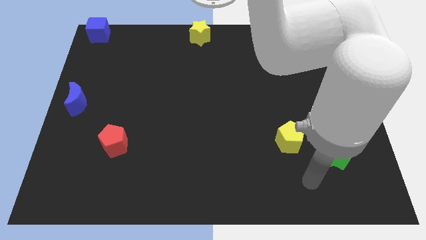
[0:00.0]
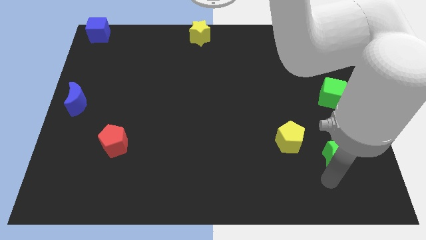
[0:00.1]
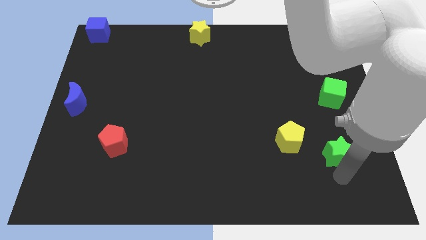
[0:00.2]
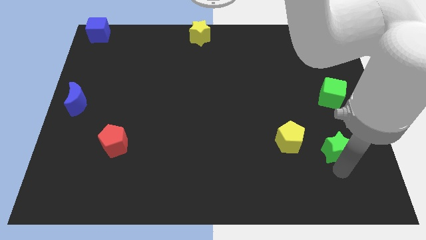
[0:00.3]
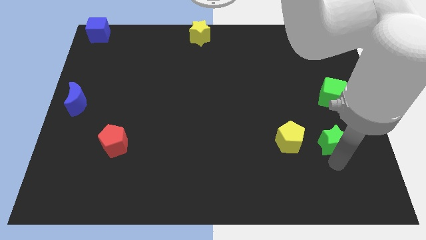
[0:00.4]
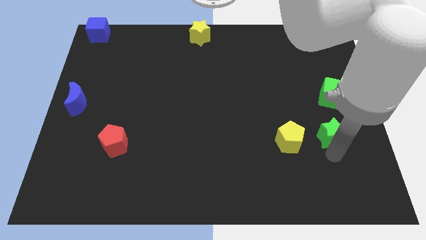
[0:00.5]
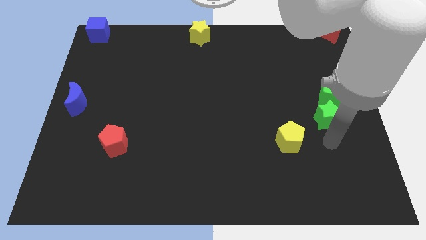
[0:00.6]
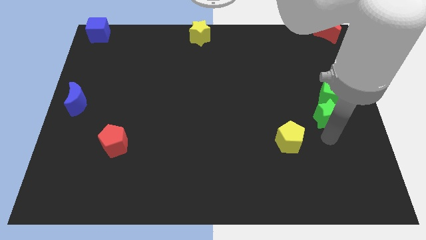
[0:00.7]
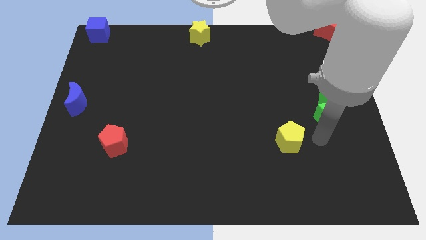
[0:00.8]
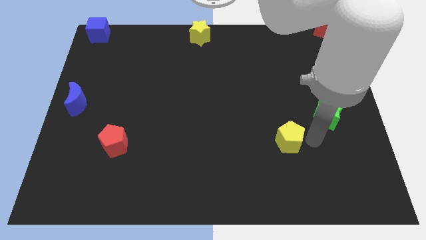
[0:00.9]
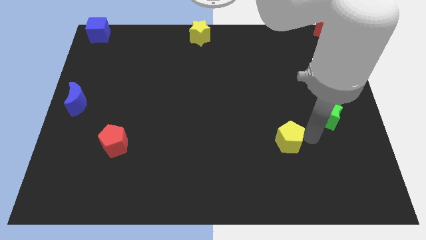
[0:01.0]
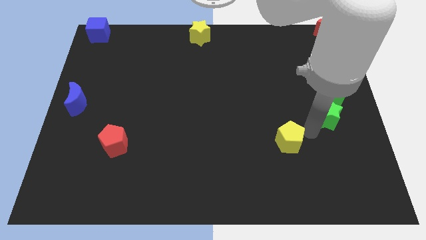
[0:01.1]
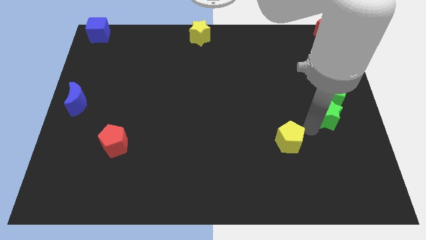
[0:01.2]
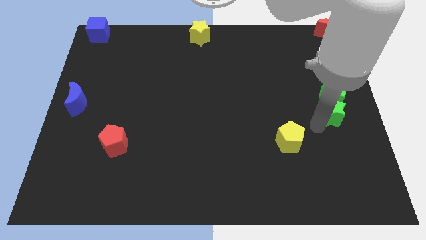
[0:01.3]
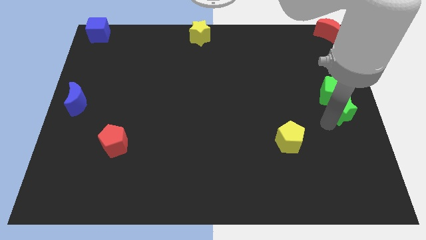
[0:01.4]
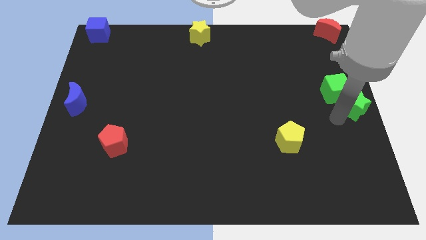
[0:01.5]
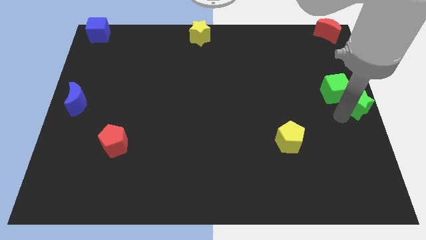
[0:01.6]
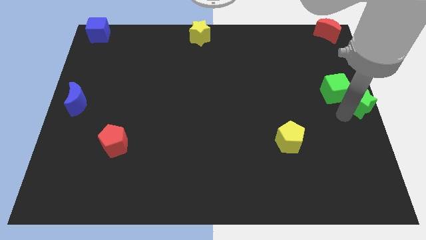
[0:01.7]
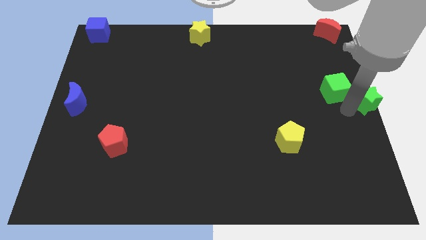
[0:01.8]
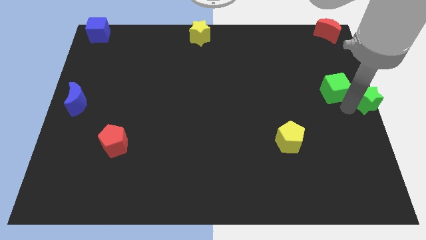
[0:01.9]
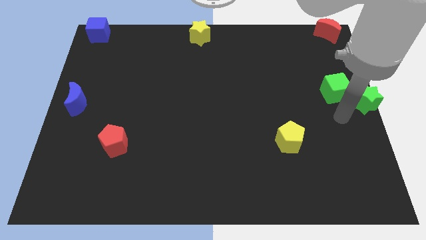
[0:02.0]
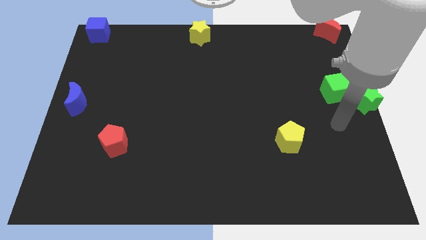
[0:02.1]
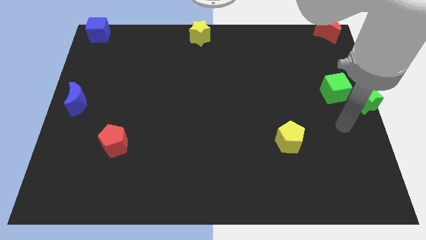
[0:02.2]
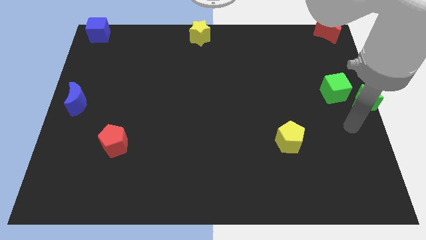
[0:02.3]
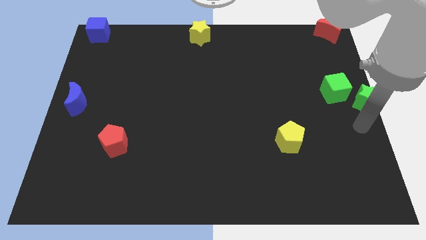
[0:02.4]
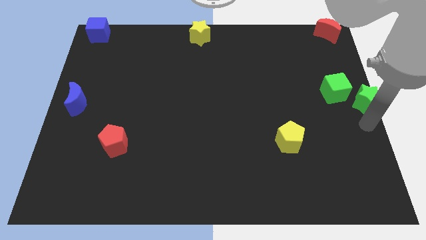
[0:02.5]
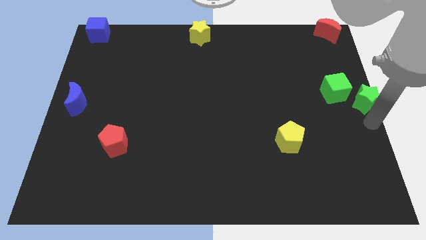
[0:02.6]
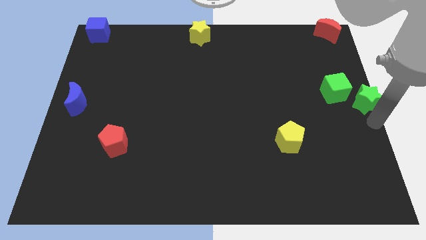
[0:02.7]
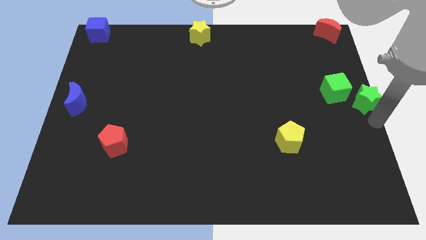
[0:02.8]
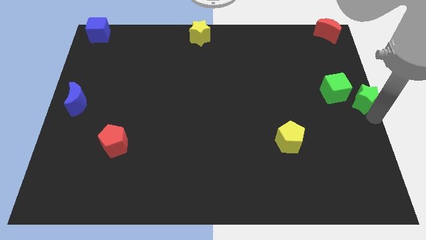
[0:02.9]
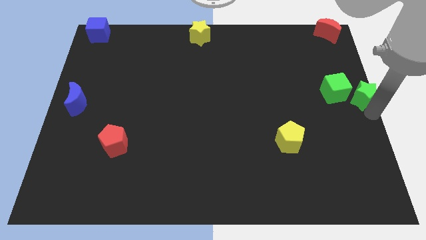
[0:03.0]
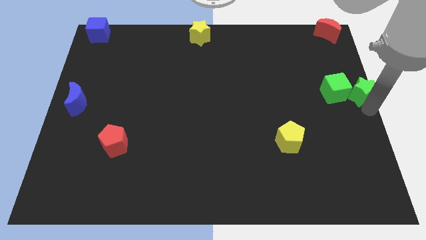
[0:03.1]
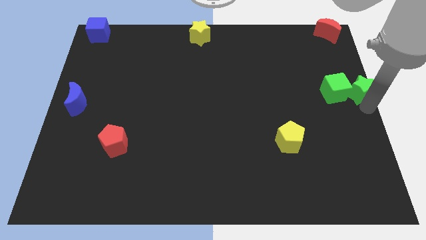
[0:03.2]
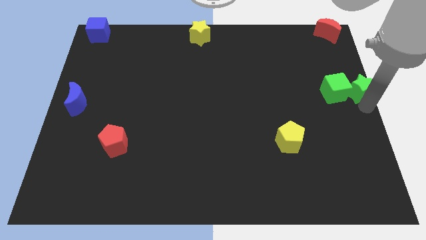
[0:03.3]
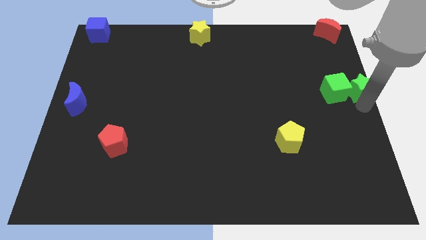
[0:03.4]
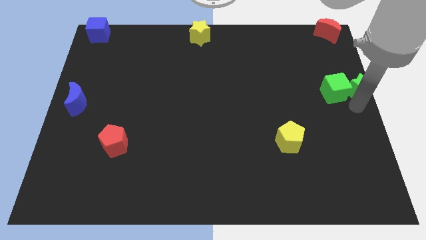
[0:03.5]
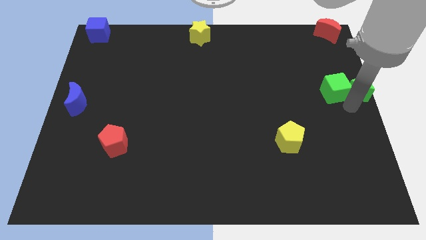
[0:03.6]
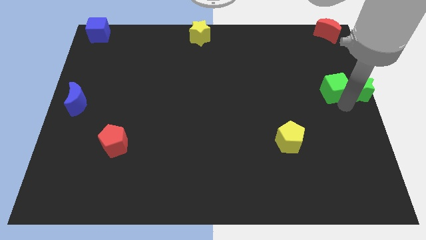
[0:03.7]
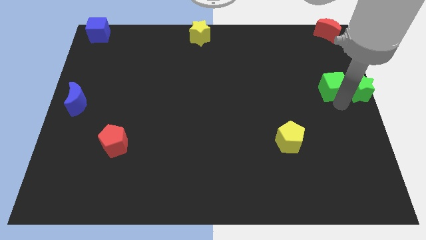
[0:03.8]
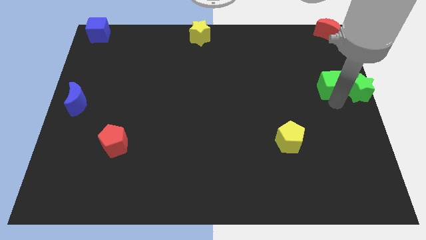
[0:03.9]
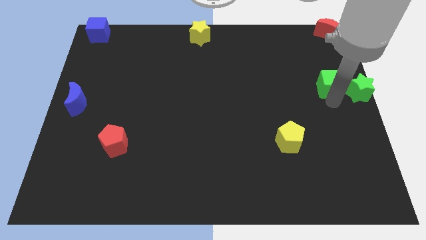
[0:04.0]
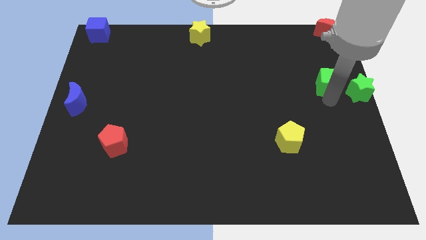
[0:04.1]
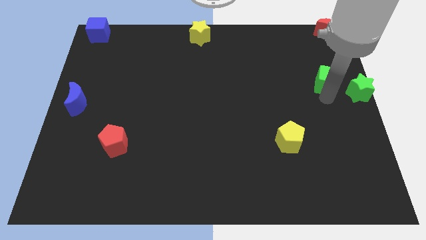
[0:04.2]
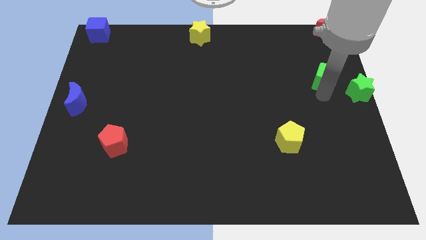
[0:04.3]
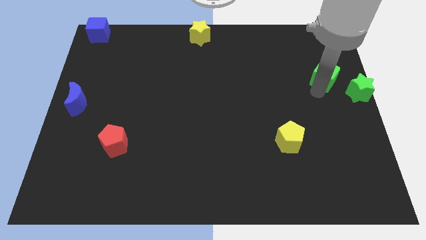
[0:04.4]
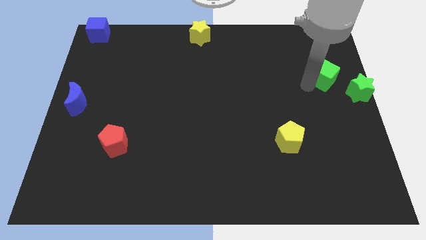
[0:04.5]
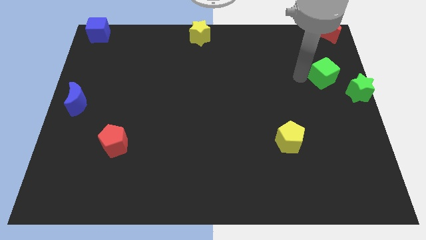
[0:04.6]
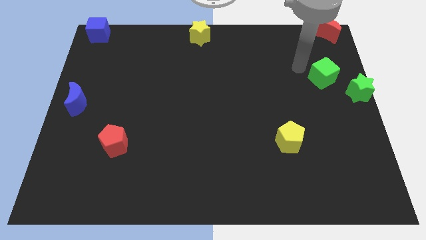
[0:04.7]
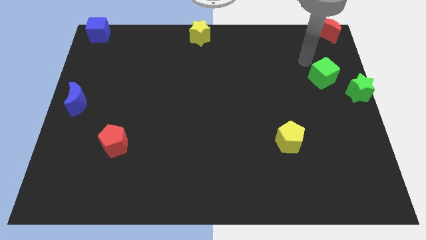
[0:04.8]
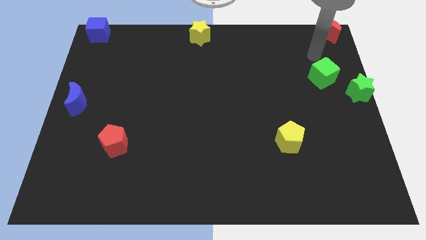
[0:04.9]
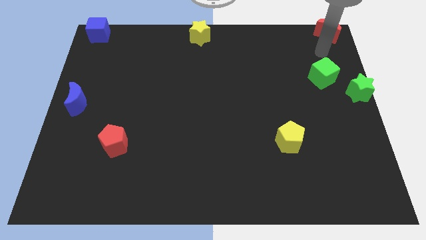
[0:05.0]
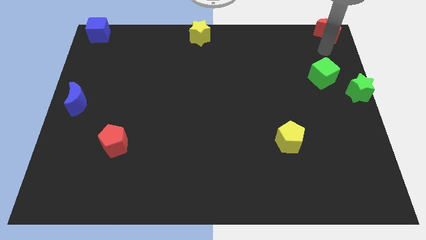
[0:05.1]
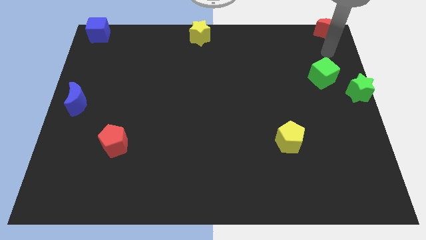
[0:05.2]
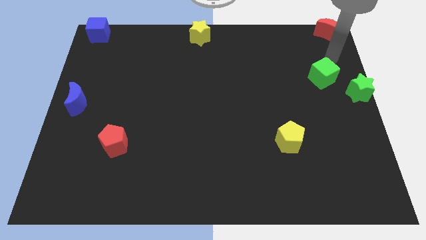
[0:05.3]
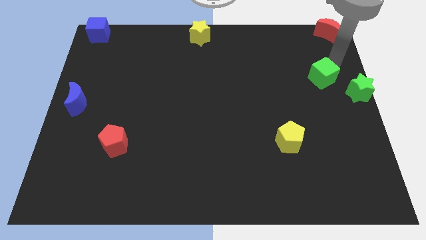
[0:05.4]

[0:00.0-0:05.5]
move the green cube and green star towards center right of the board

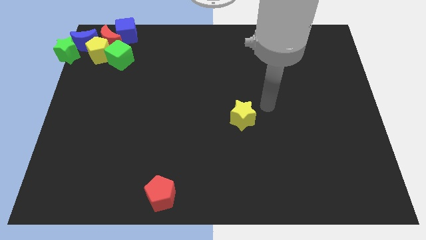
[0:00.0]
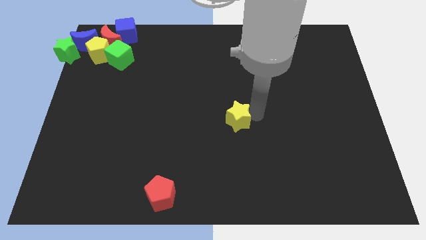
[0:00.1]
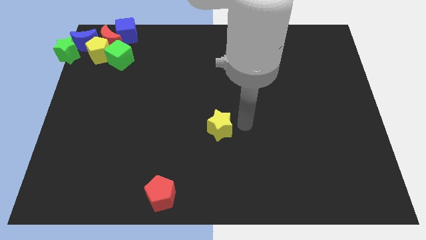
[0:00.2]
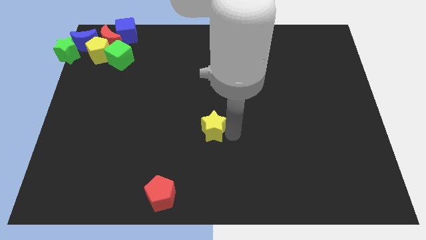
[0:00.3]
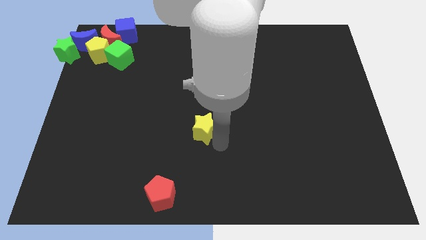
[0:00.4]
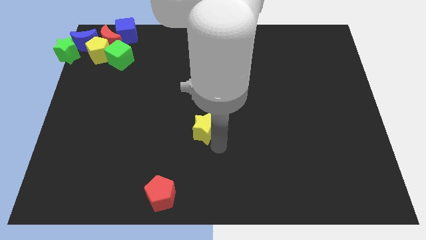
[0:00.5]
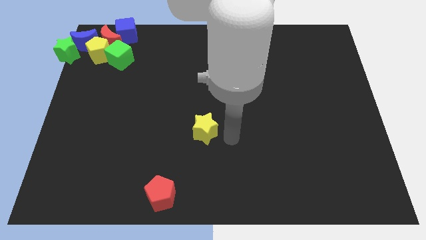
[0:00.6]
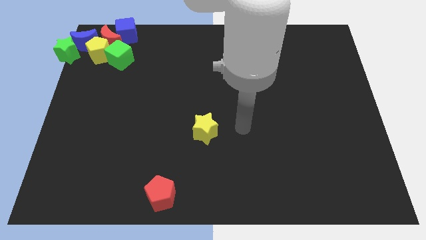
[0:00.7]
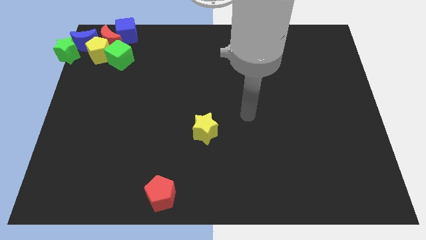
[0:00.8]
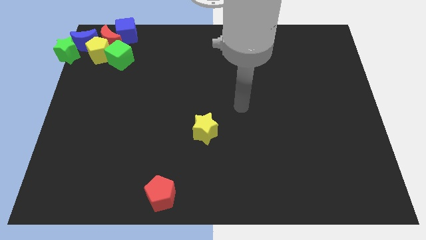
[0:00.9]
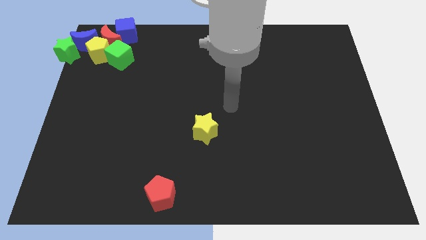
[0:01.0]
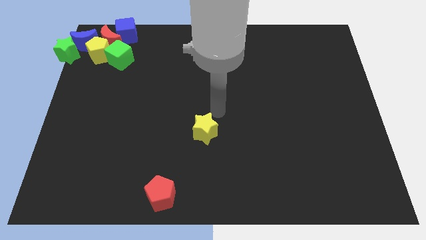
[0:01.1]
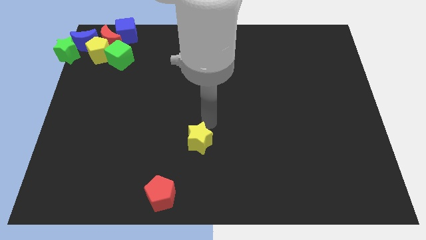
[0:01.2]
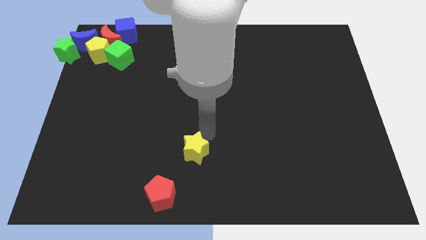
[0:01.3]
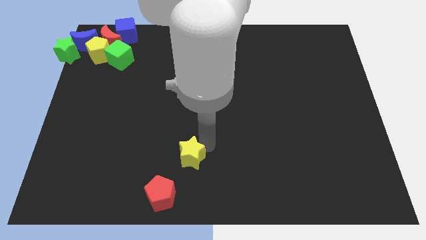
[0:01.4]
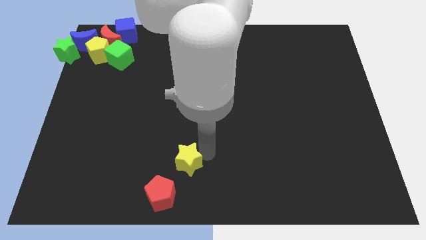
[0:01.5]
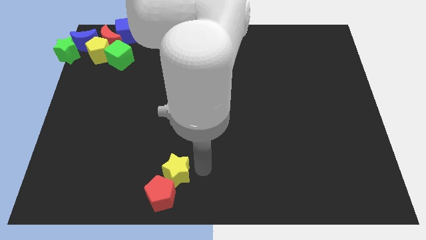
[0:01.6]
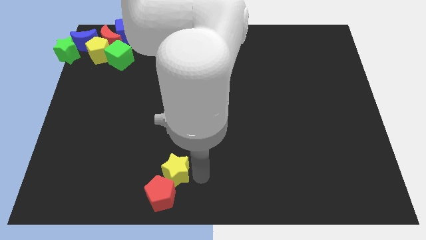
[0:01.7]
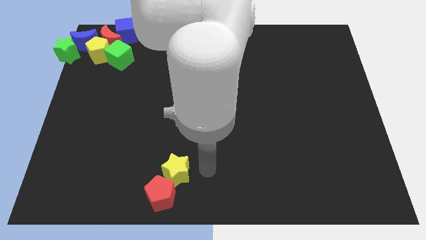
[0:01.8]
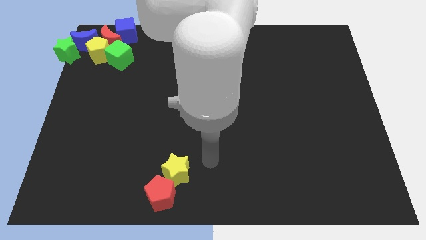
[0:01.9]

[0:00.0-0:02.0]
push the yellow star towards the top right side of the red pentagon

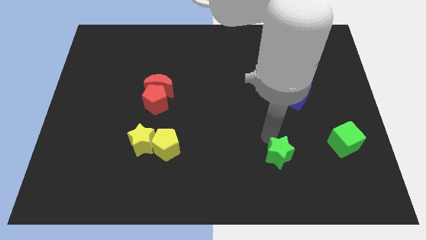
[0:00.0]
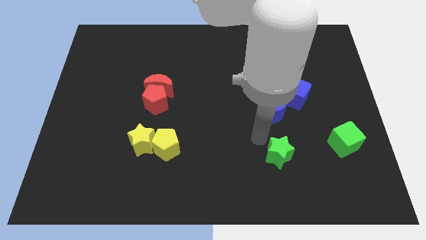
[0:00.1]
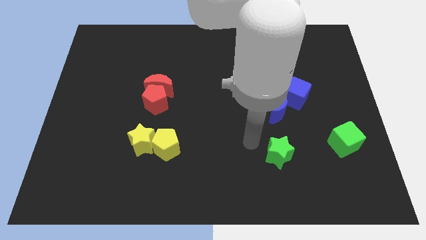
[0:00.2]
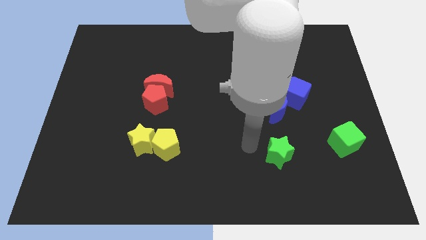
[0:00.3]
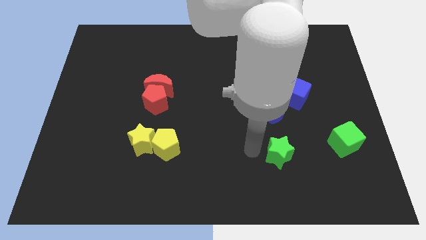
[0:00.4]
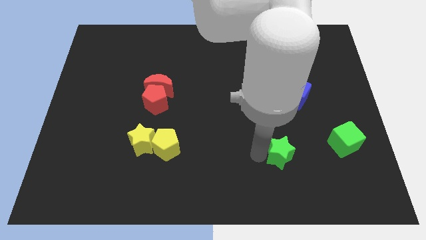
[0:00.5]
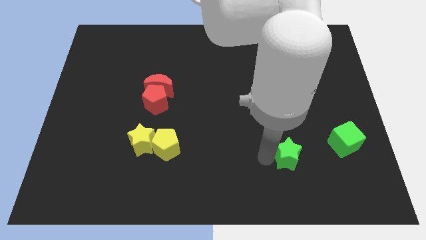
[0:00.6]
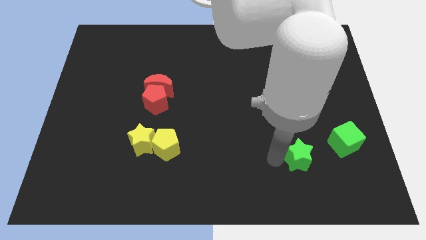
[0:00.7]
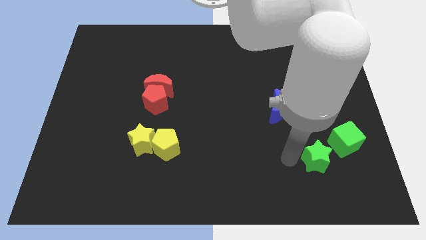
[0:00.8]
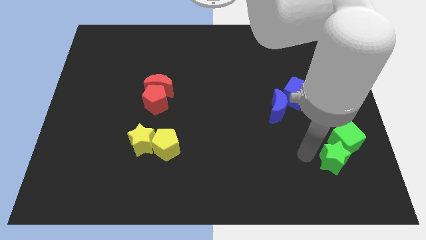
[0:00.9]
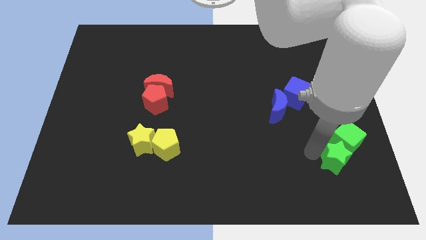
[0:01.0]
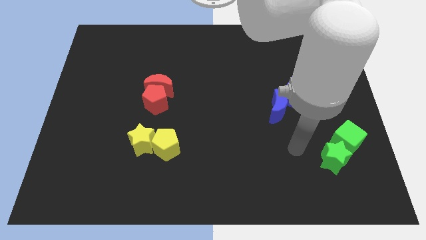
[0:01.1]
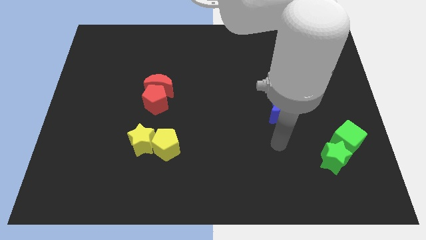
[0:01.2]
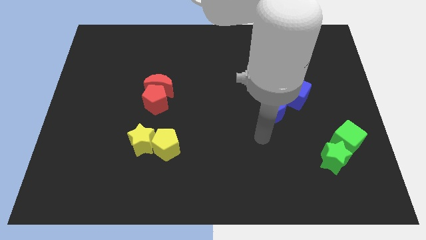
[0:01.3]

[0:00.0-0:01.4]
move the green star into the green cube

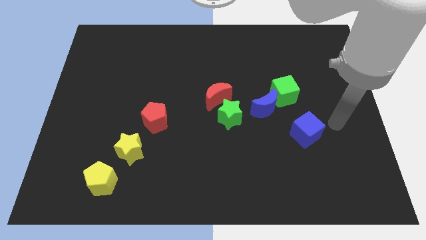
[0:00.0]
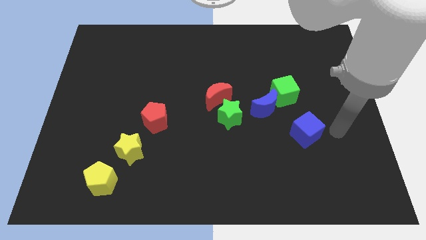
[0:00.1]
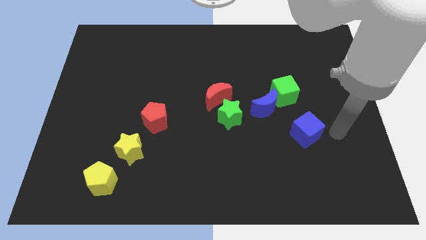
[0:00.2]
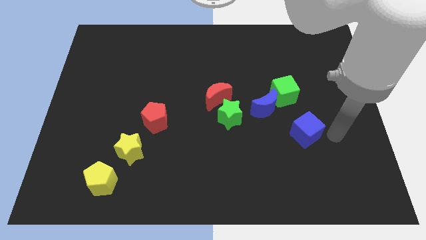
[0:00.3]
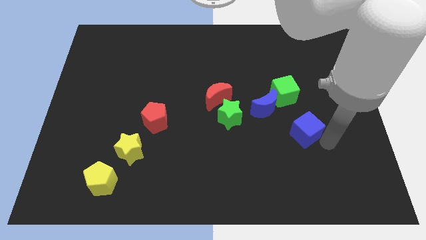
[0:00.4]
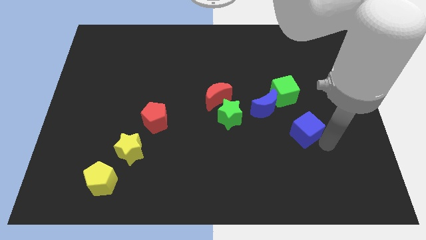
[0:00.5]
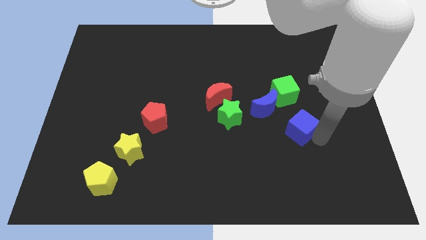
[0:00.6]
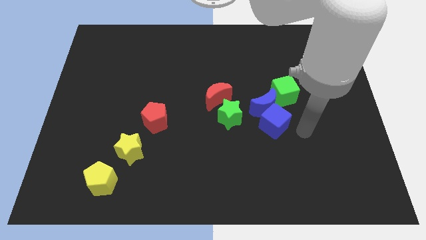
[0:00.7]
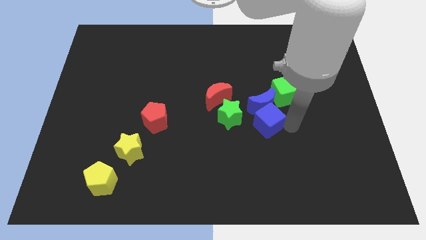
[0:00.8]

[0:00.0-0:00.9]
place blue cube below blue crescent
